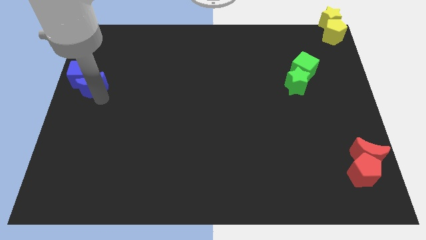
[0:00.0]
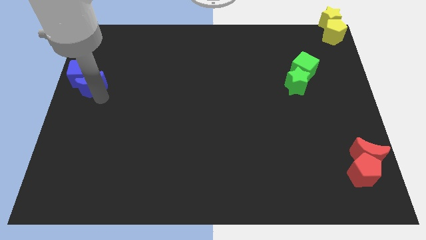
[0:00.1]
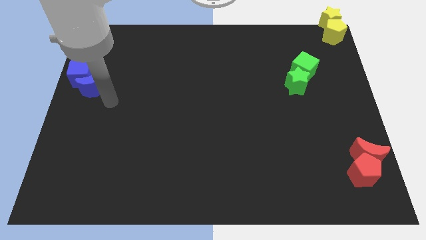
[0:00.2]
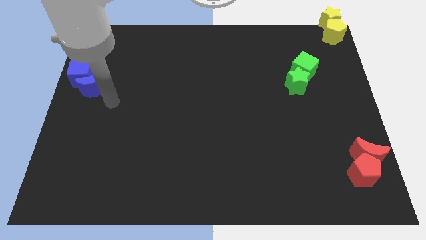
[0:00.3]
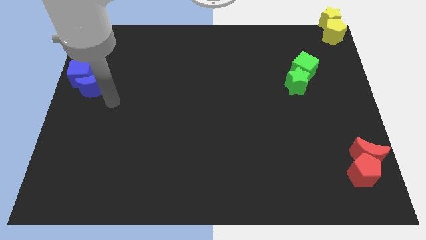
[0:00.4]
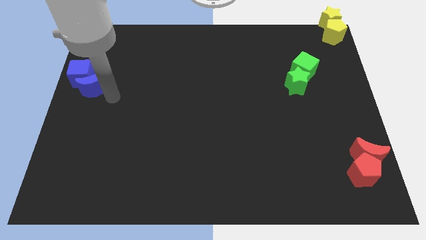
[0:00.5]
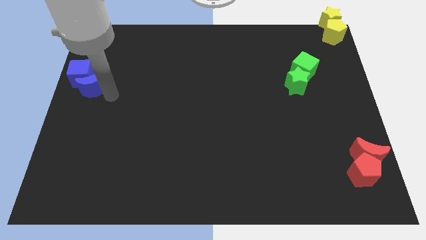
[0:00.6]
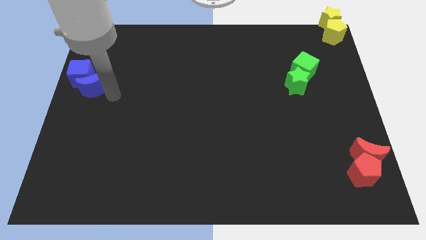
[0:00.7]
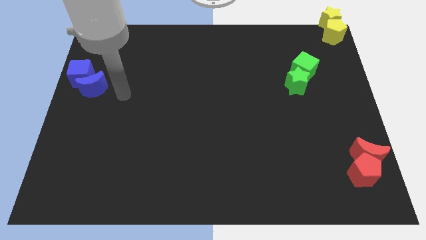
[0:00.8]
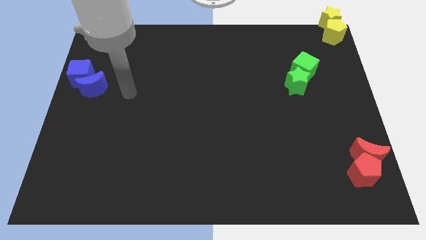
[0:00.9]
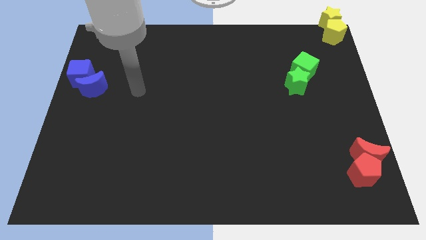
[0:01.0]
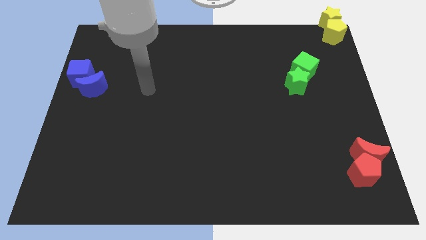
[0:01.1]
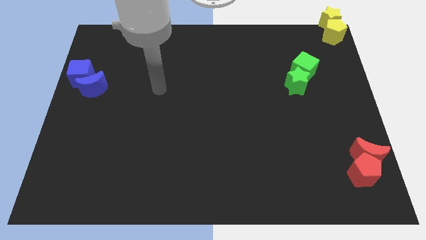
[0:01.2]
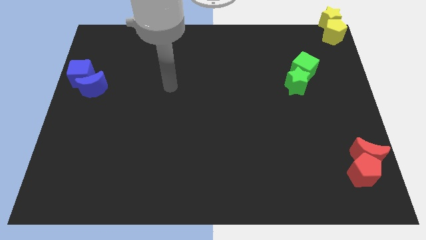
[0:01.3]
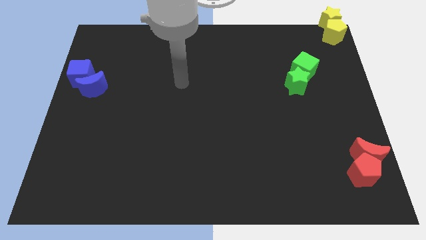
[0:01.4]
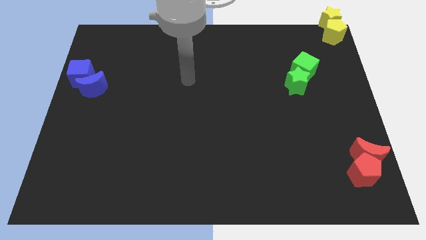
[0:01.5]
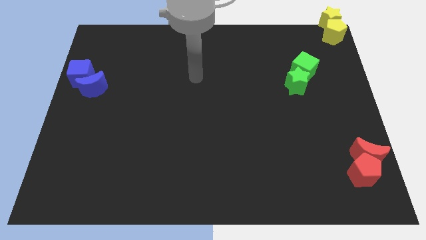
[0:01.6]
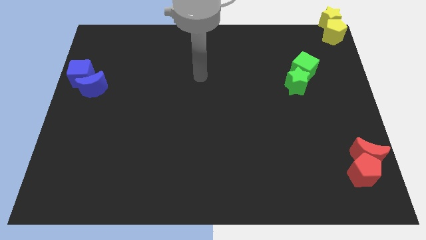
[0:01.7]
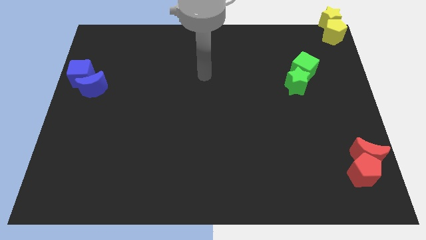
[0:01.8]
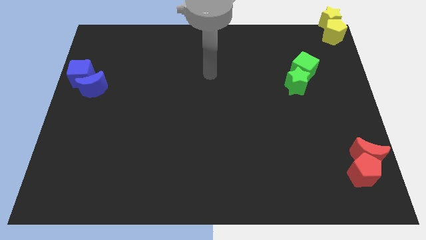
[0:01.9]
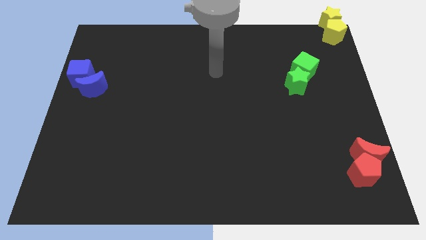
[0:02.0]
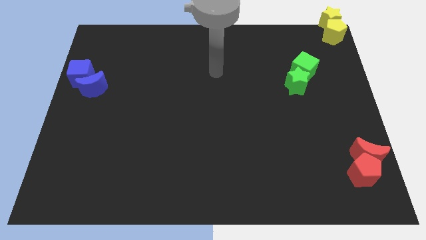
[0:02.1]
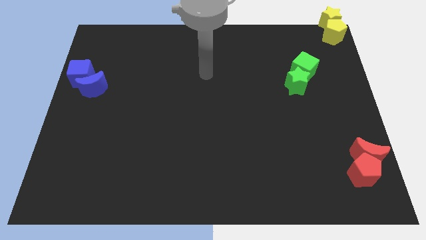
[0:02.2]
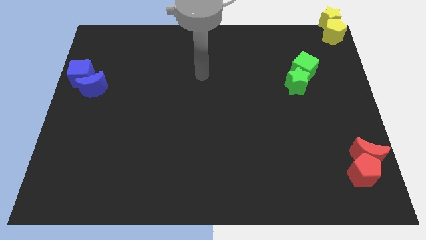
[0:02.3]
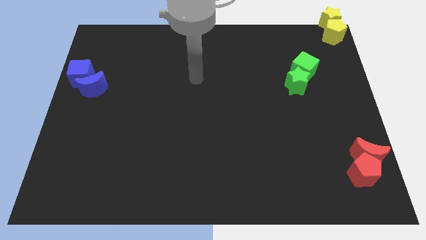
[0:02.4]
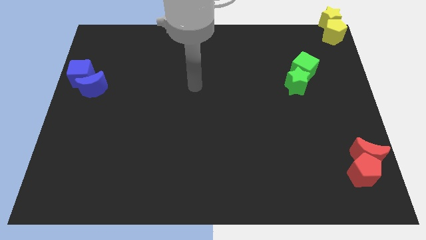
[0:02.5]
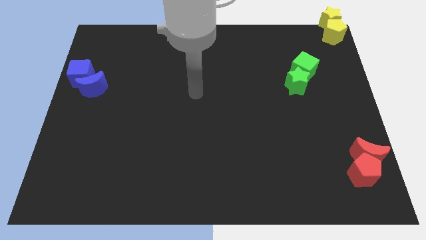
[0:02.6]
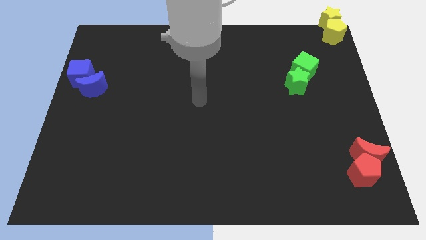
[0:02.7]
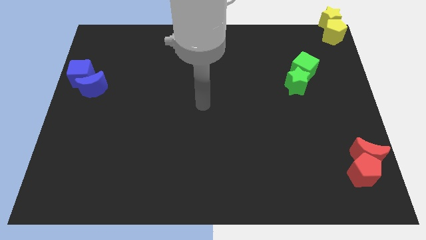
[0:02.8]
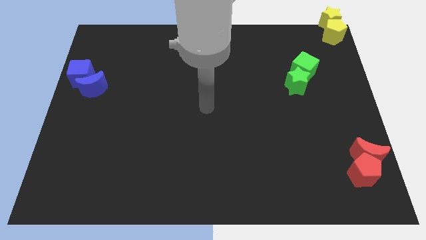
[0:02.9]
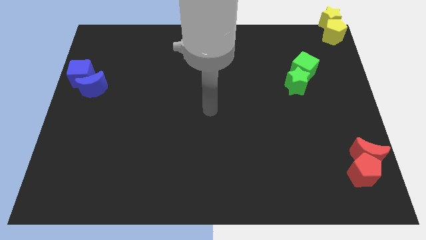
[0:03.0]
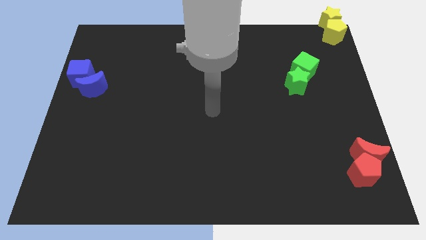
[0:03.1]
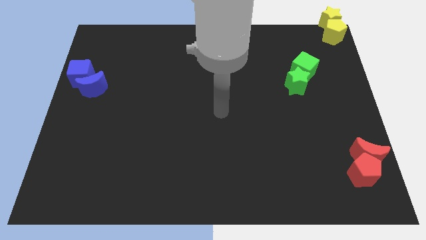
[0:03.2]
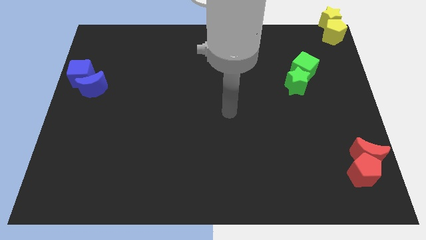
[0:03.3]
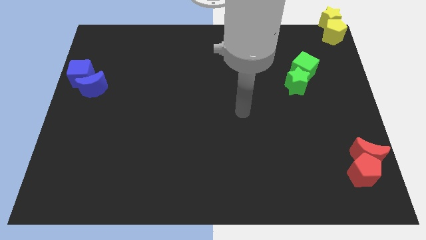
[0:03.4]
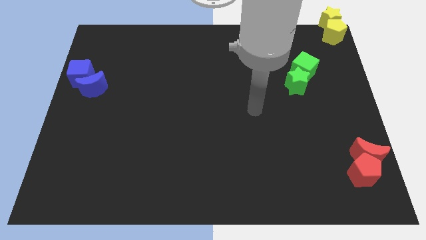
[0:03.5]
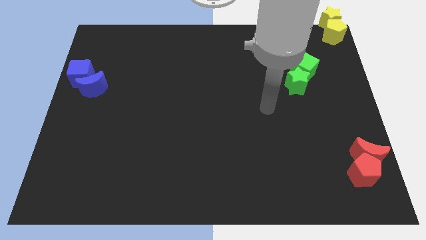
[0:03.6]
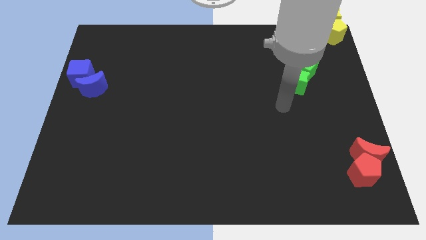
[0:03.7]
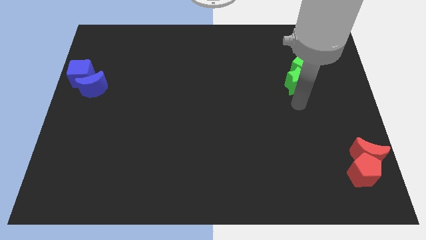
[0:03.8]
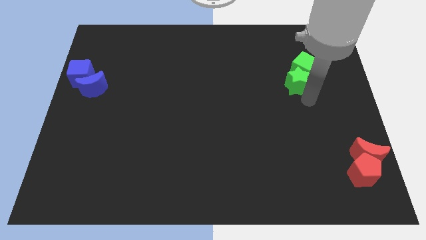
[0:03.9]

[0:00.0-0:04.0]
point your arm at the bottom side of the green star

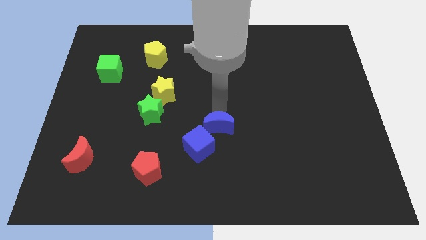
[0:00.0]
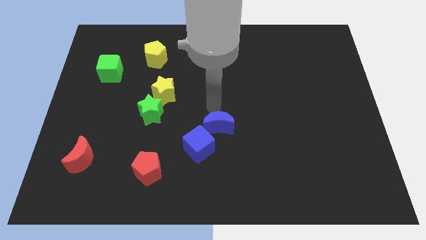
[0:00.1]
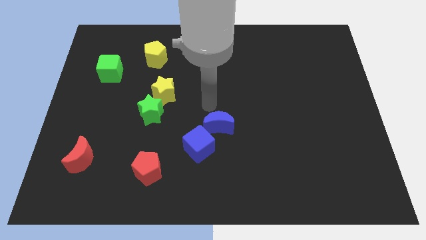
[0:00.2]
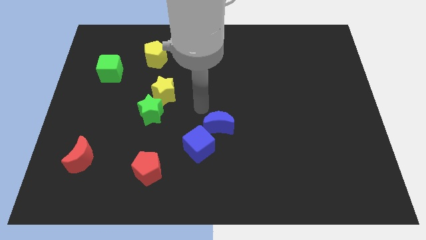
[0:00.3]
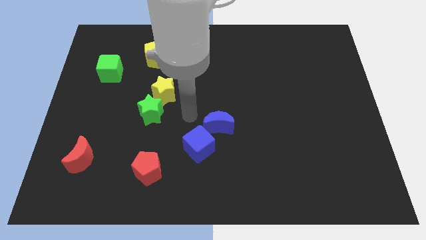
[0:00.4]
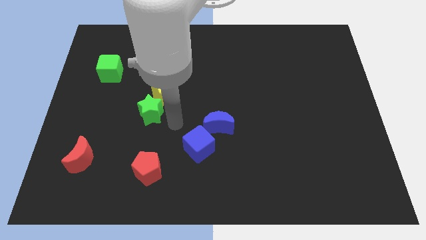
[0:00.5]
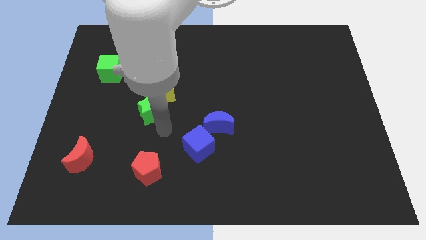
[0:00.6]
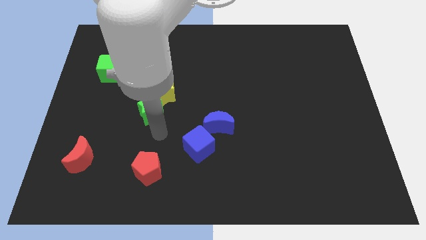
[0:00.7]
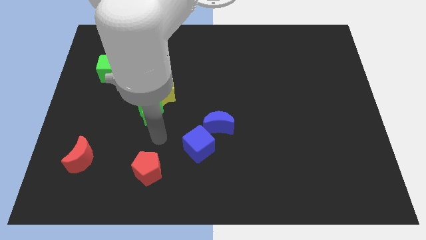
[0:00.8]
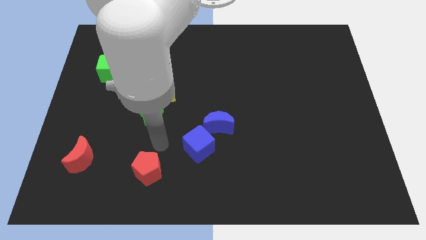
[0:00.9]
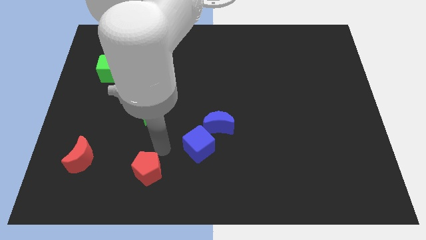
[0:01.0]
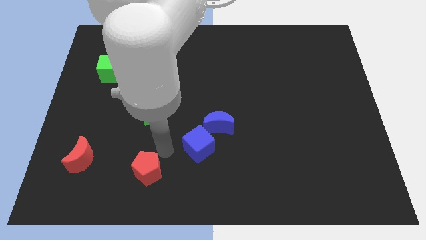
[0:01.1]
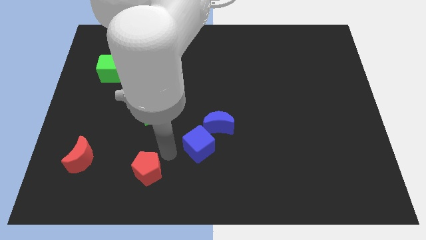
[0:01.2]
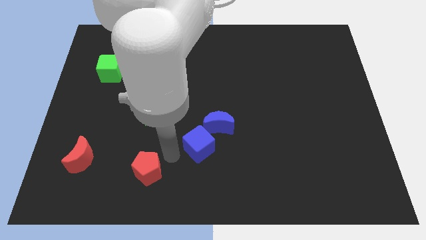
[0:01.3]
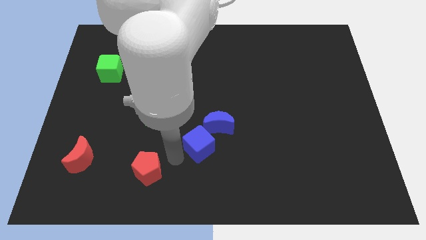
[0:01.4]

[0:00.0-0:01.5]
move your arm towards the blue cube

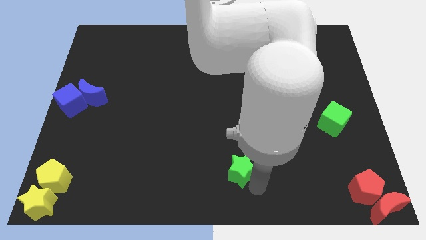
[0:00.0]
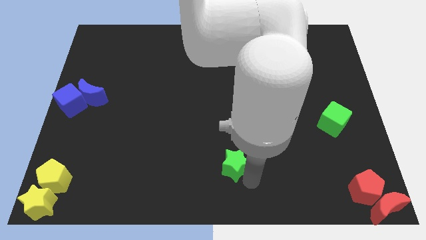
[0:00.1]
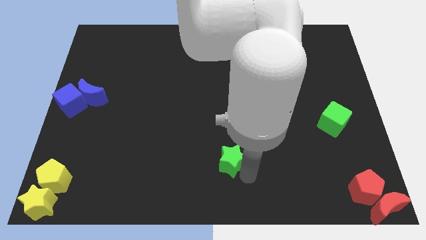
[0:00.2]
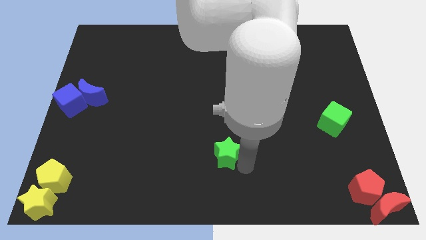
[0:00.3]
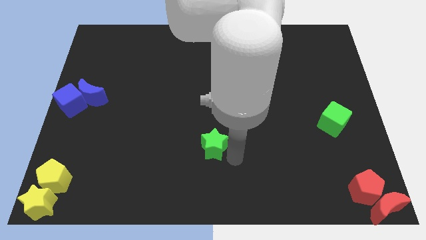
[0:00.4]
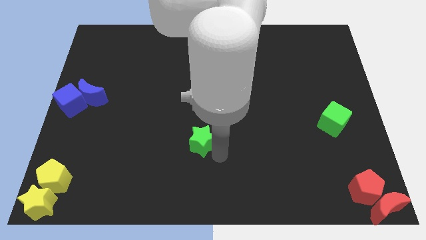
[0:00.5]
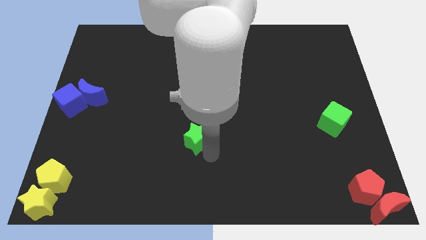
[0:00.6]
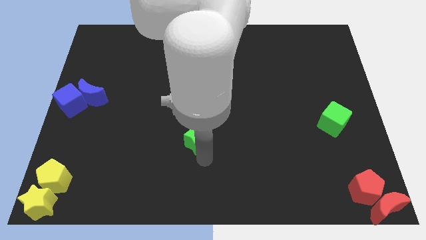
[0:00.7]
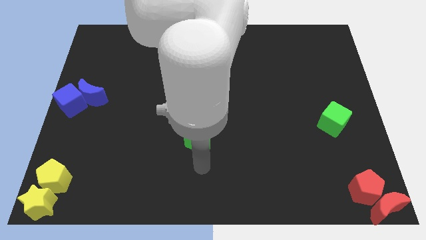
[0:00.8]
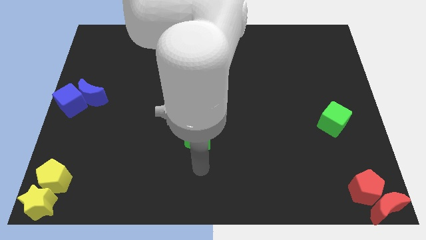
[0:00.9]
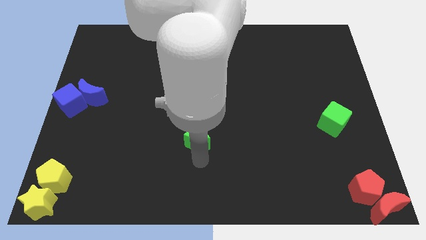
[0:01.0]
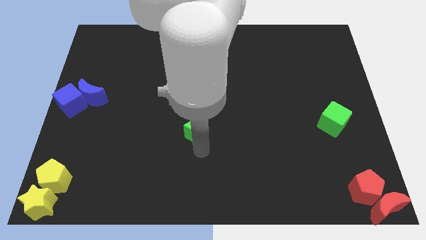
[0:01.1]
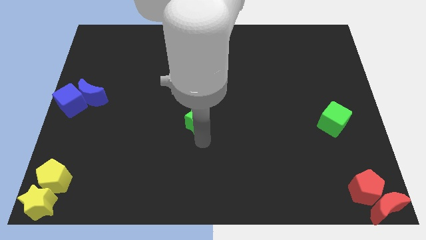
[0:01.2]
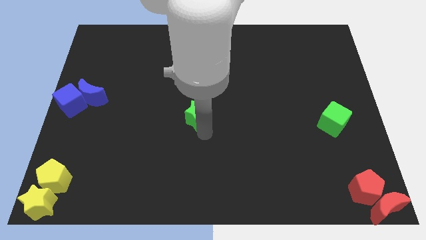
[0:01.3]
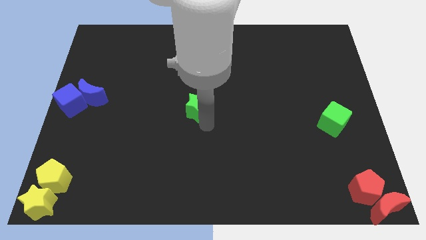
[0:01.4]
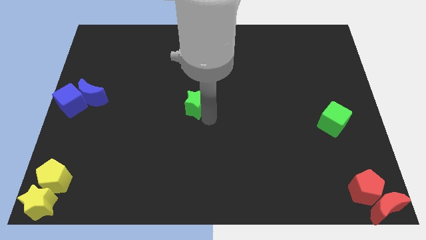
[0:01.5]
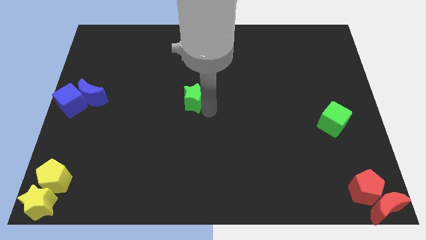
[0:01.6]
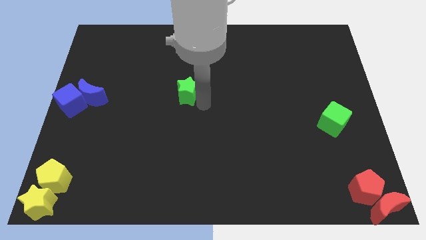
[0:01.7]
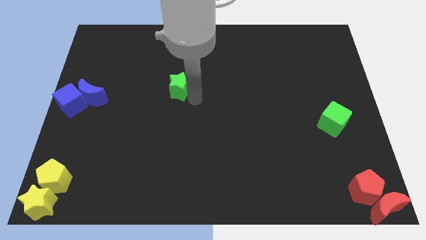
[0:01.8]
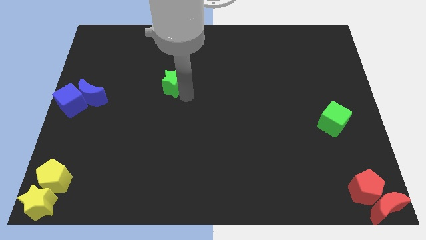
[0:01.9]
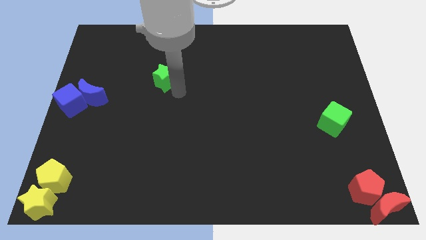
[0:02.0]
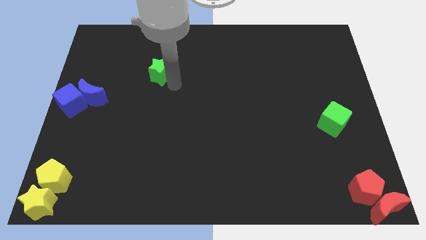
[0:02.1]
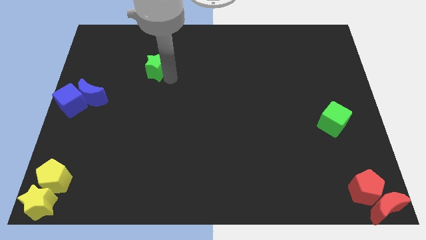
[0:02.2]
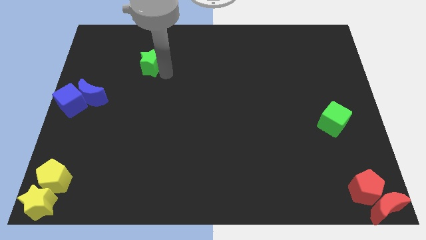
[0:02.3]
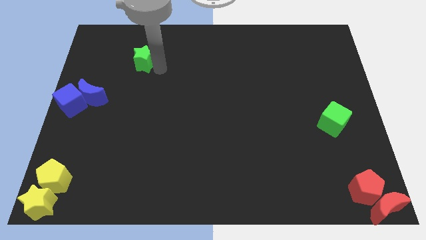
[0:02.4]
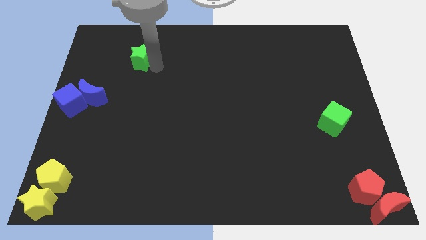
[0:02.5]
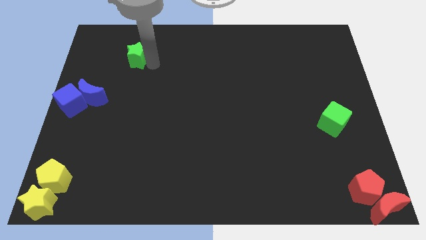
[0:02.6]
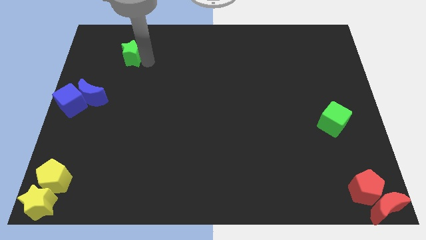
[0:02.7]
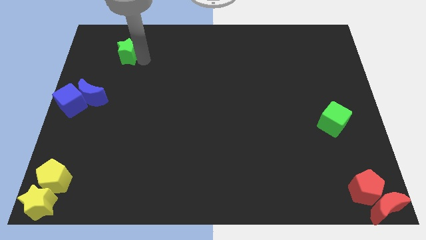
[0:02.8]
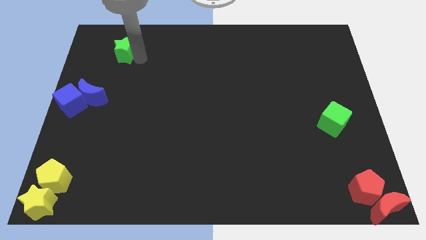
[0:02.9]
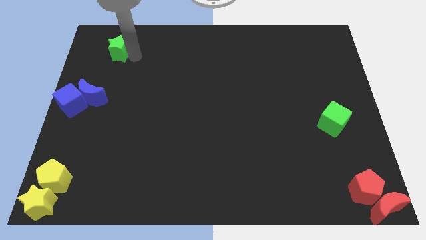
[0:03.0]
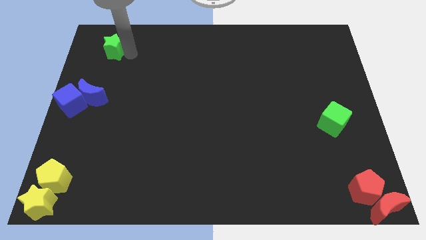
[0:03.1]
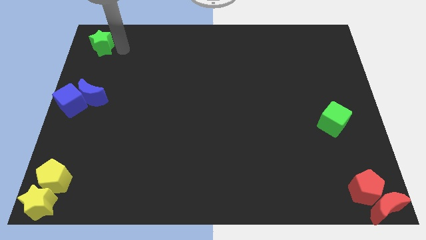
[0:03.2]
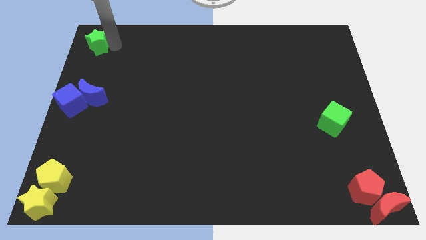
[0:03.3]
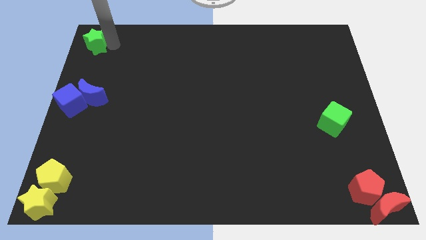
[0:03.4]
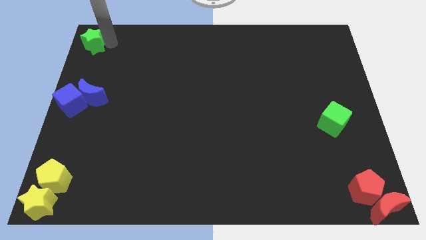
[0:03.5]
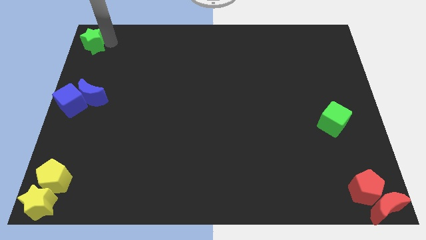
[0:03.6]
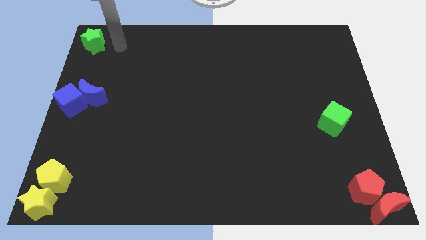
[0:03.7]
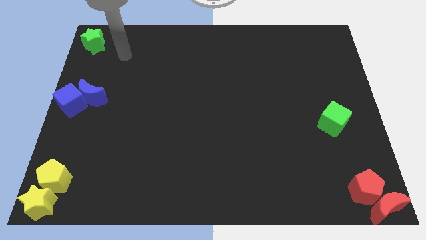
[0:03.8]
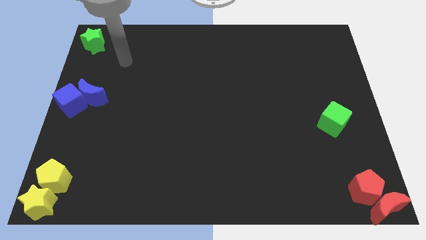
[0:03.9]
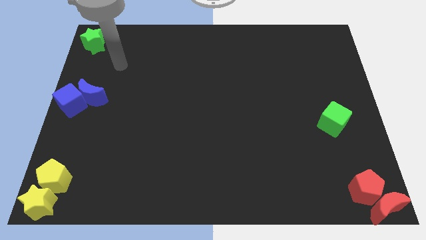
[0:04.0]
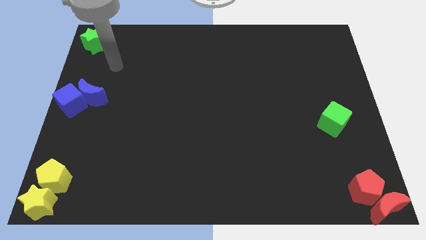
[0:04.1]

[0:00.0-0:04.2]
place the green star on the top left of the board
